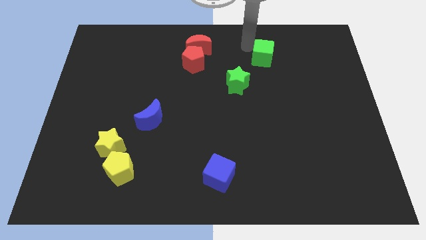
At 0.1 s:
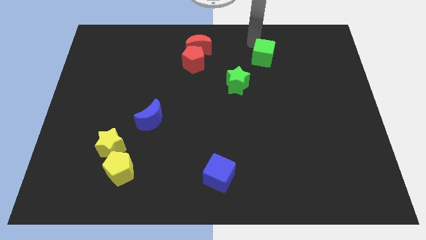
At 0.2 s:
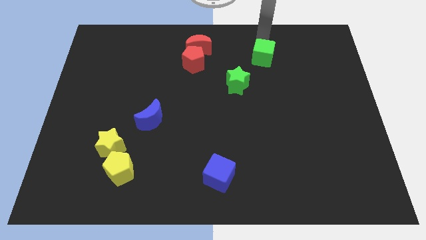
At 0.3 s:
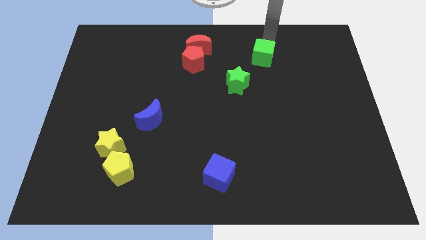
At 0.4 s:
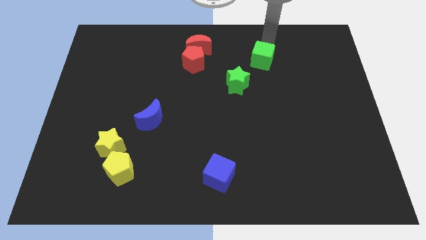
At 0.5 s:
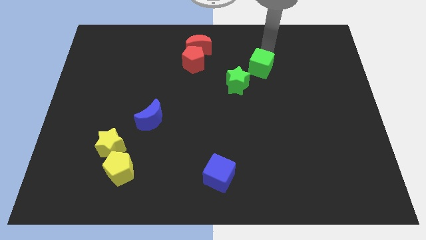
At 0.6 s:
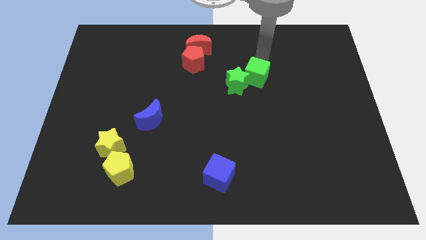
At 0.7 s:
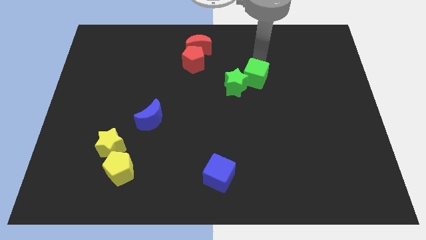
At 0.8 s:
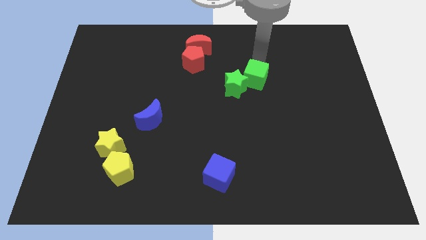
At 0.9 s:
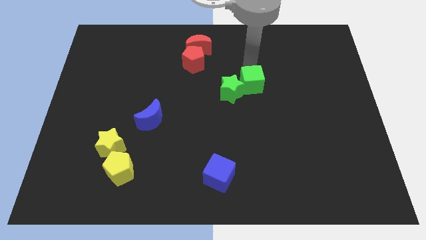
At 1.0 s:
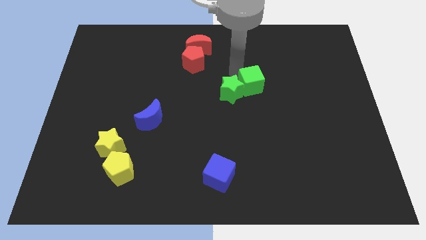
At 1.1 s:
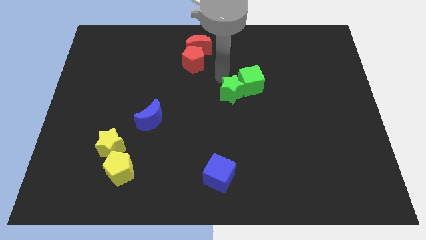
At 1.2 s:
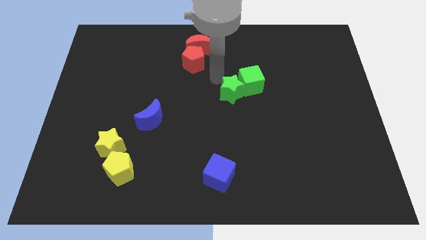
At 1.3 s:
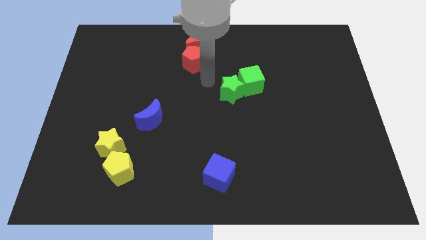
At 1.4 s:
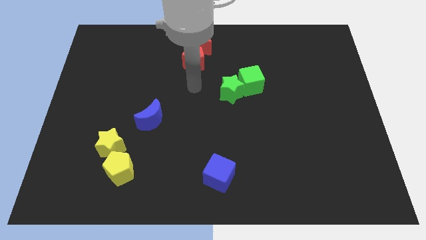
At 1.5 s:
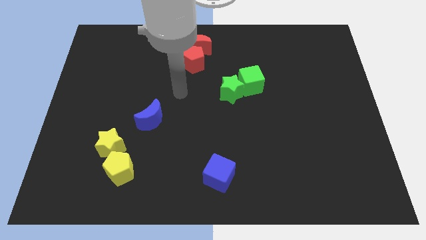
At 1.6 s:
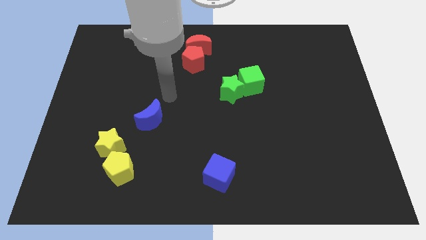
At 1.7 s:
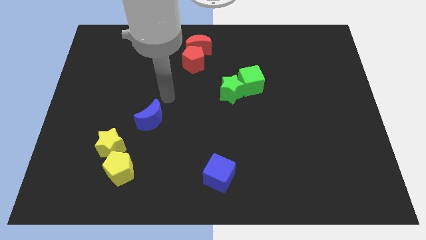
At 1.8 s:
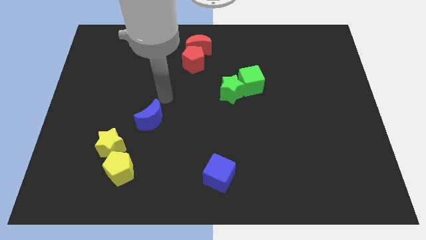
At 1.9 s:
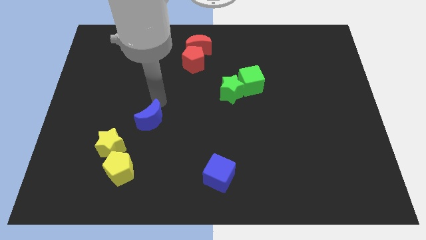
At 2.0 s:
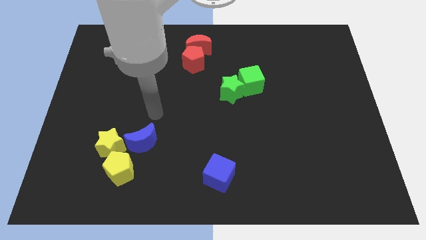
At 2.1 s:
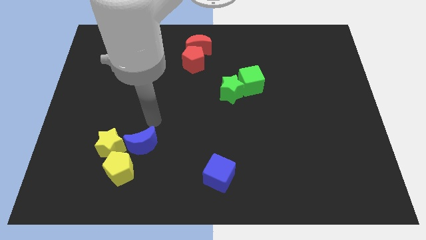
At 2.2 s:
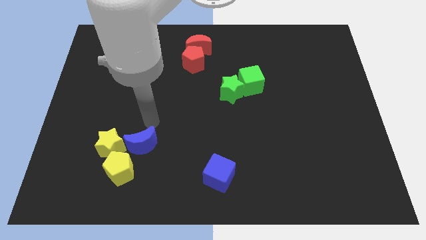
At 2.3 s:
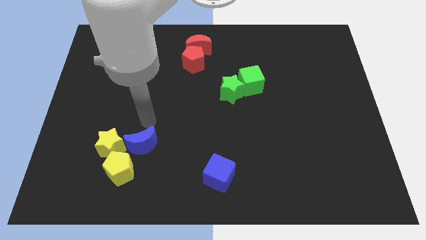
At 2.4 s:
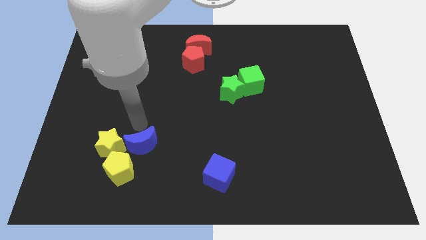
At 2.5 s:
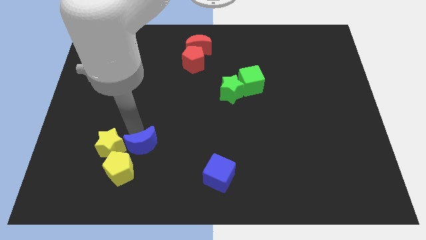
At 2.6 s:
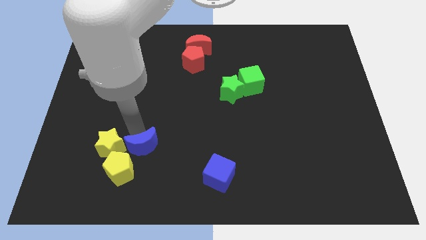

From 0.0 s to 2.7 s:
place the blue moon to the right of the yellow star

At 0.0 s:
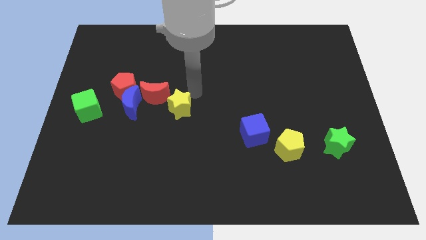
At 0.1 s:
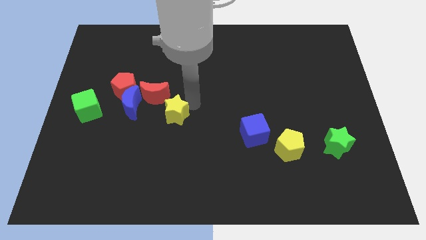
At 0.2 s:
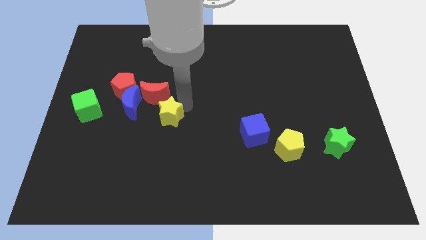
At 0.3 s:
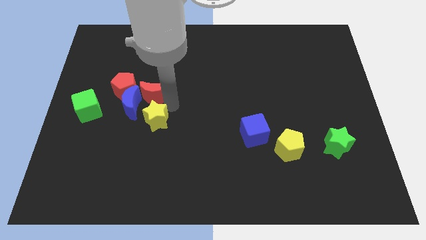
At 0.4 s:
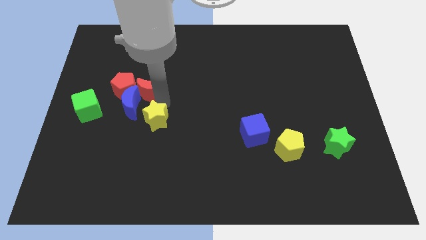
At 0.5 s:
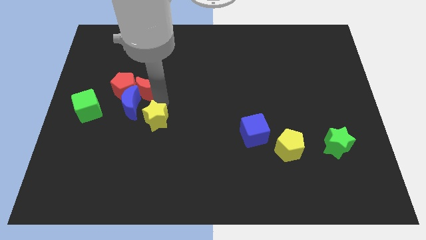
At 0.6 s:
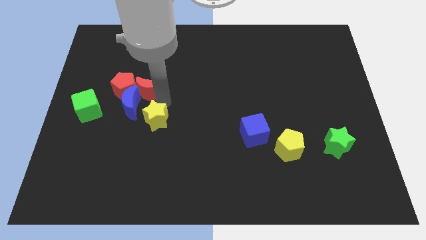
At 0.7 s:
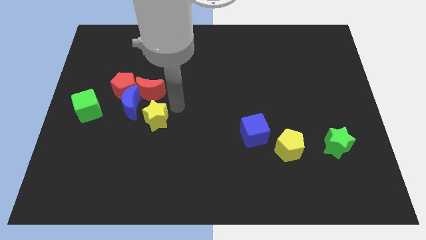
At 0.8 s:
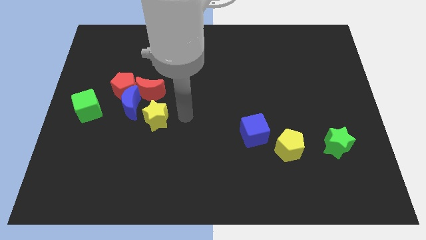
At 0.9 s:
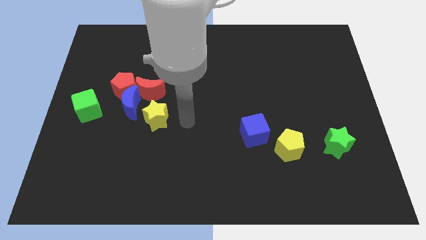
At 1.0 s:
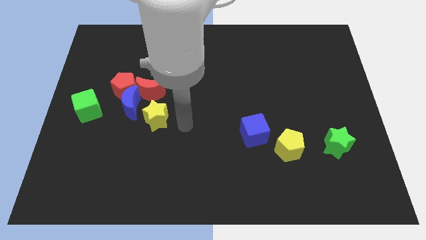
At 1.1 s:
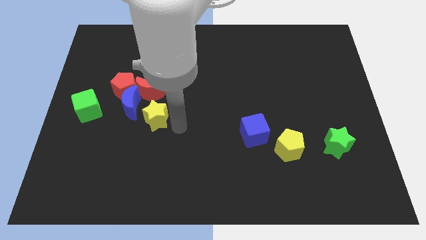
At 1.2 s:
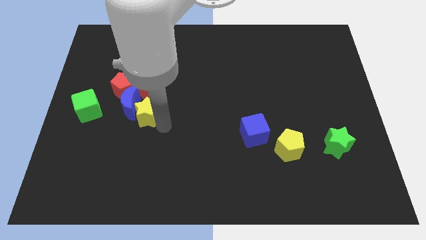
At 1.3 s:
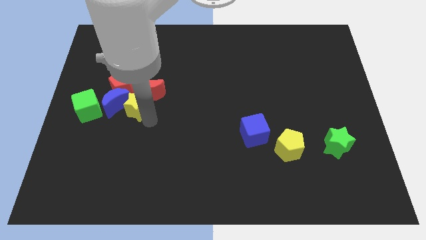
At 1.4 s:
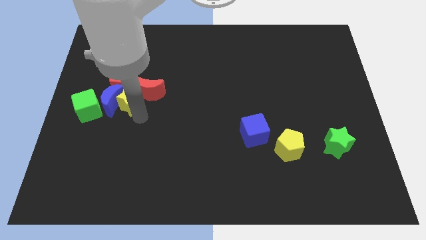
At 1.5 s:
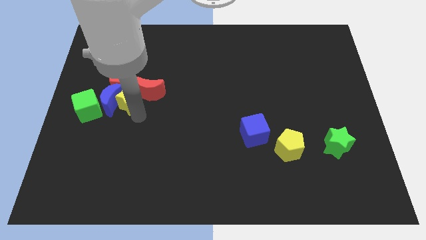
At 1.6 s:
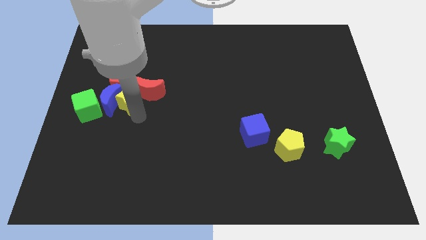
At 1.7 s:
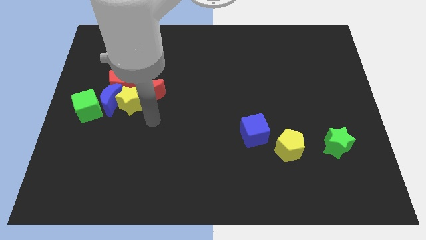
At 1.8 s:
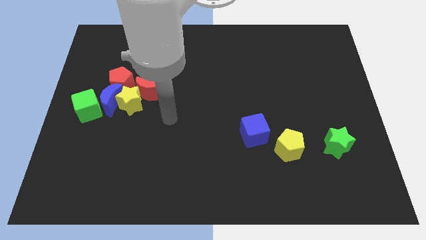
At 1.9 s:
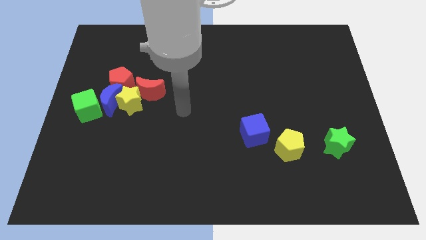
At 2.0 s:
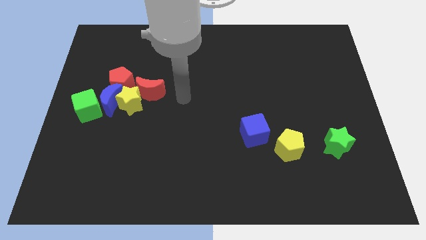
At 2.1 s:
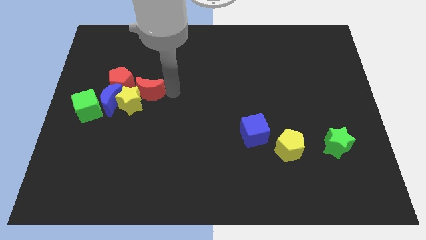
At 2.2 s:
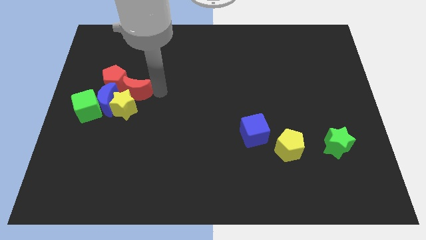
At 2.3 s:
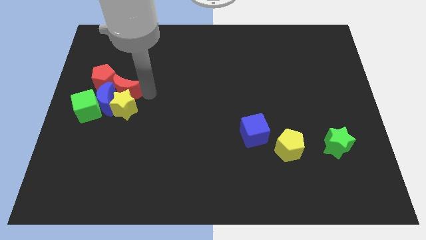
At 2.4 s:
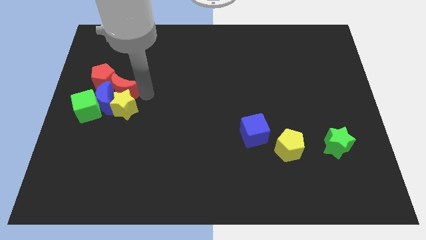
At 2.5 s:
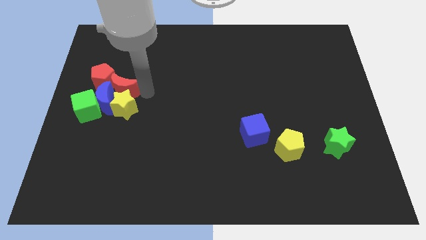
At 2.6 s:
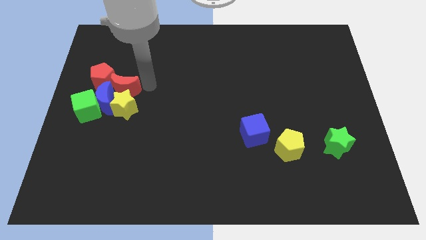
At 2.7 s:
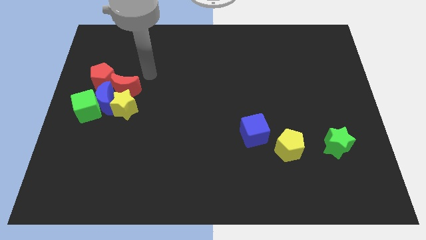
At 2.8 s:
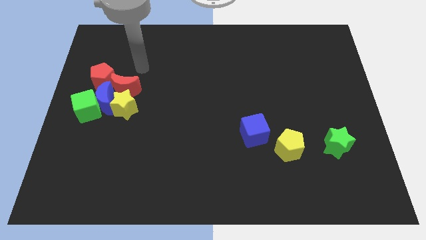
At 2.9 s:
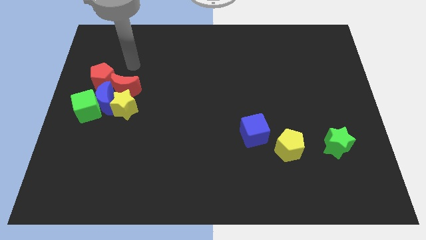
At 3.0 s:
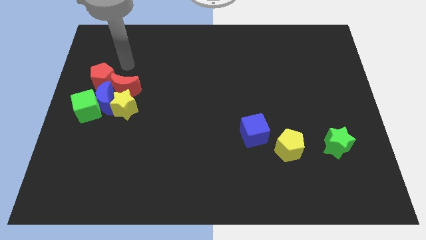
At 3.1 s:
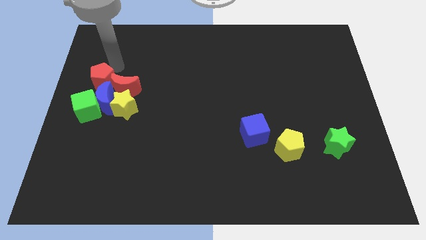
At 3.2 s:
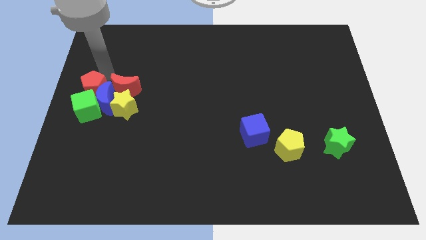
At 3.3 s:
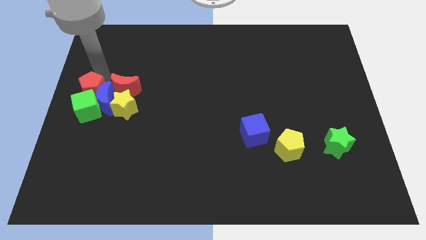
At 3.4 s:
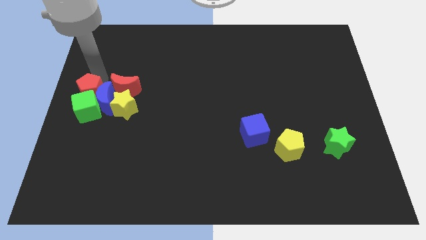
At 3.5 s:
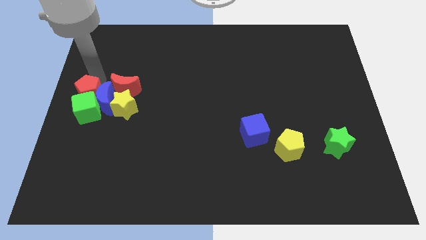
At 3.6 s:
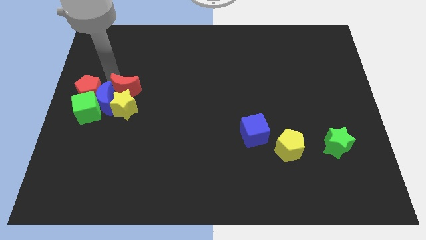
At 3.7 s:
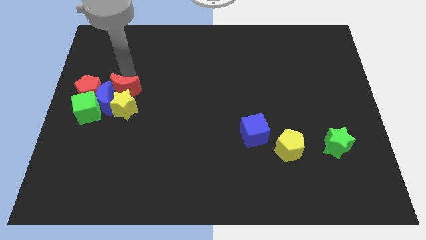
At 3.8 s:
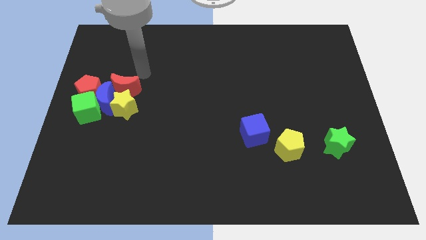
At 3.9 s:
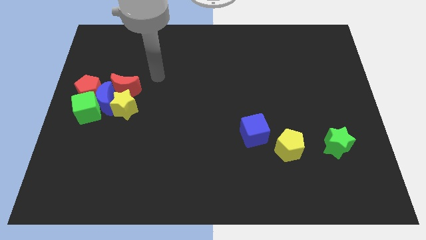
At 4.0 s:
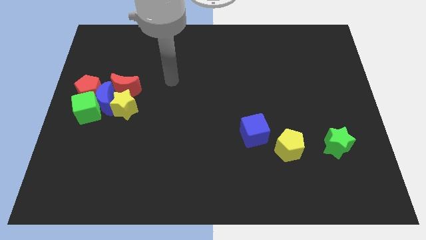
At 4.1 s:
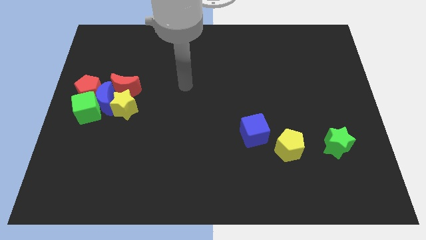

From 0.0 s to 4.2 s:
move the group of blocks into the green cube

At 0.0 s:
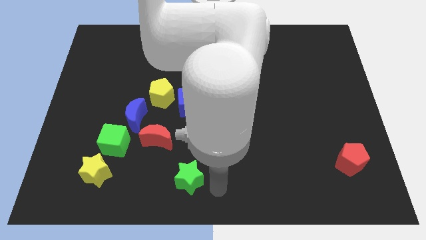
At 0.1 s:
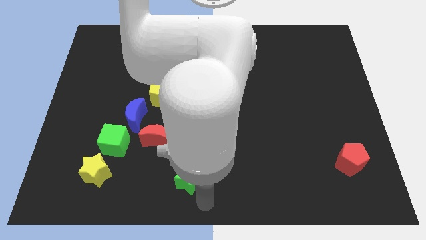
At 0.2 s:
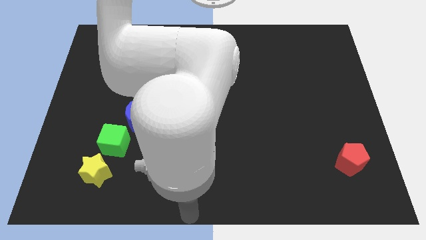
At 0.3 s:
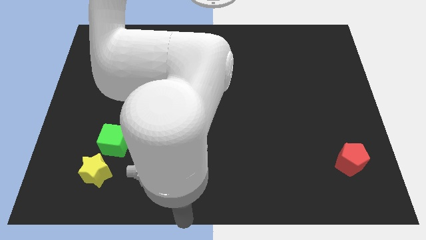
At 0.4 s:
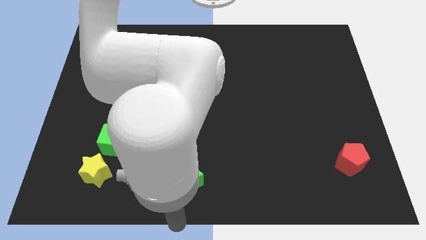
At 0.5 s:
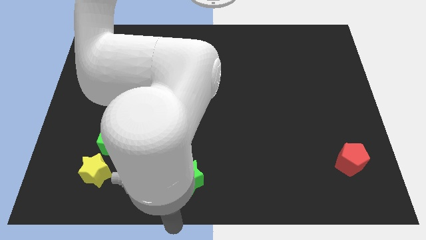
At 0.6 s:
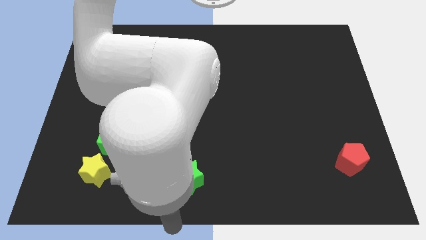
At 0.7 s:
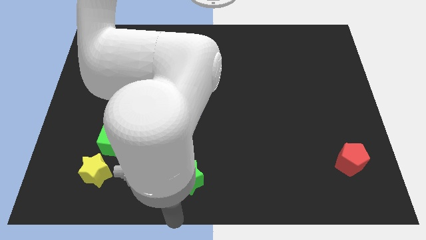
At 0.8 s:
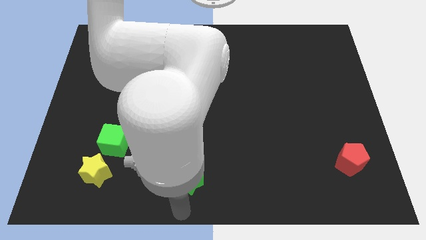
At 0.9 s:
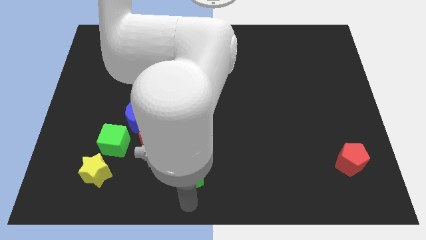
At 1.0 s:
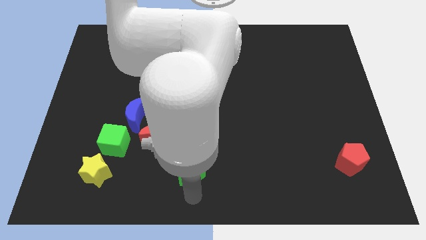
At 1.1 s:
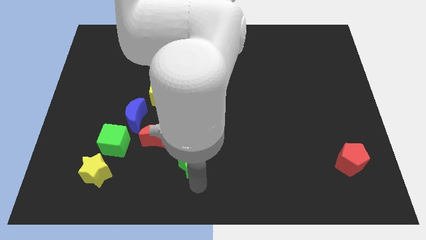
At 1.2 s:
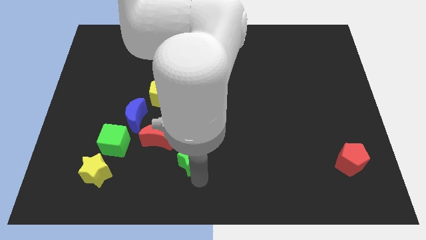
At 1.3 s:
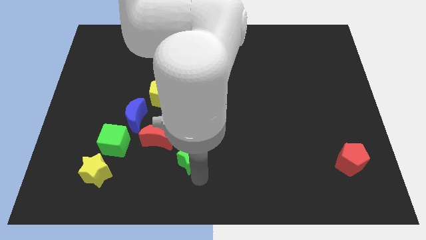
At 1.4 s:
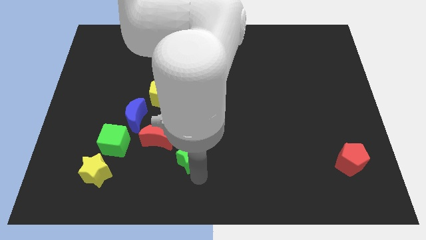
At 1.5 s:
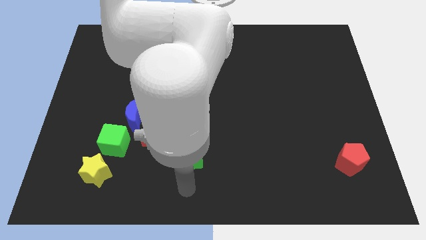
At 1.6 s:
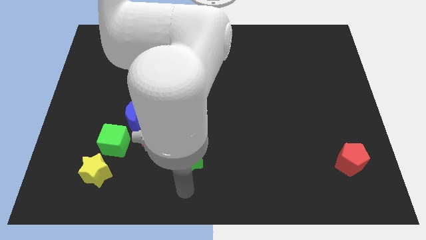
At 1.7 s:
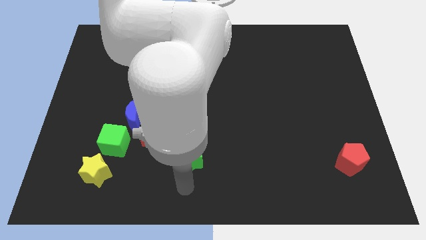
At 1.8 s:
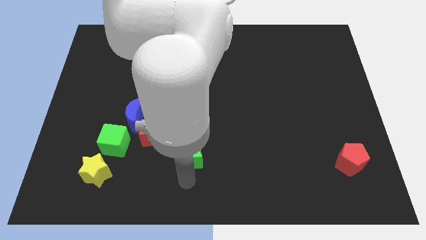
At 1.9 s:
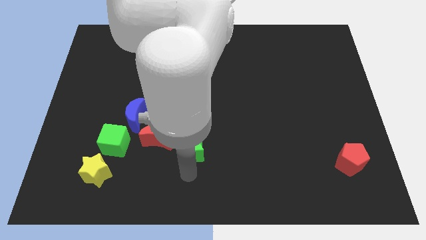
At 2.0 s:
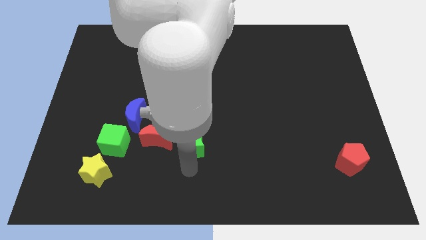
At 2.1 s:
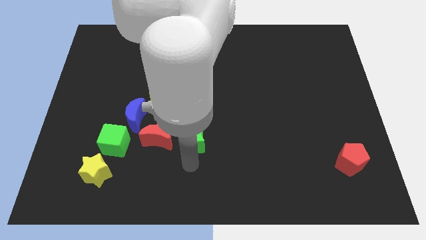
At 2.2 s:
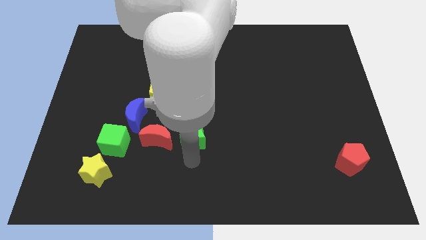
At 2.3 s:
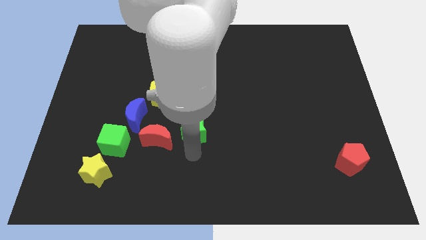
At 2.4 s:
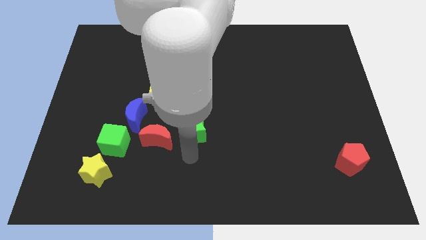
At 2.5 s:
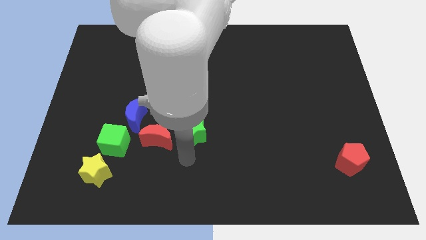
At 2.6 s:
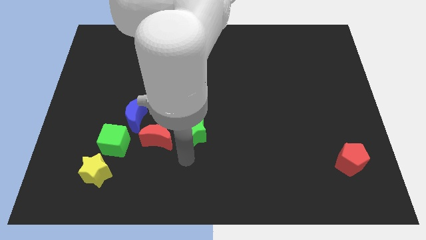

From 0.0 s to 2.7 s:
push the green star towards upward
